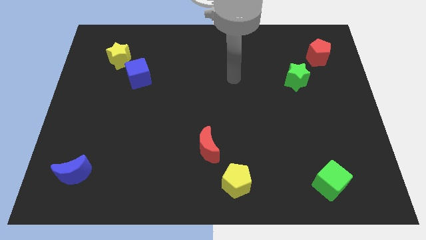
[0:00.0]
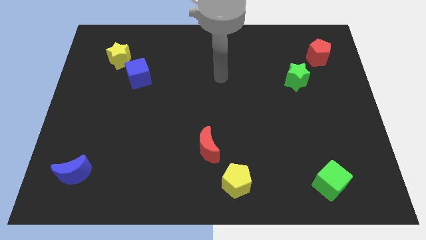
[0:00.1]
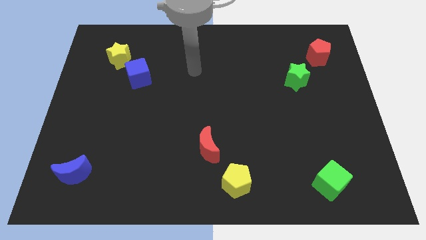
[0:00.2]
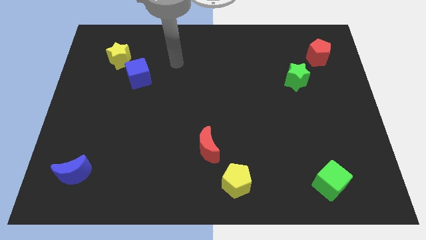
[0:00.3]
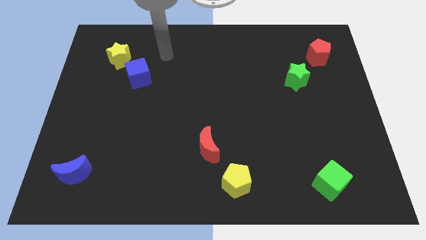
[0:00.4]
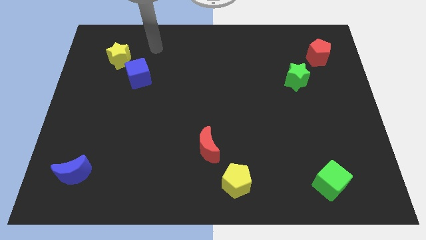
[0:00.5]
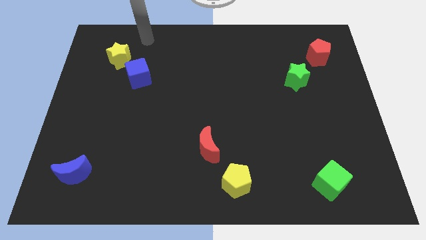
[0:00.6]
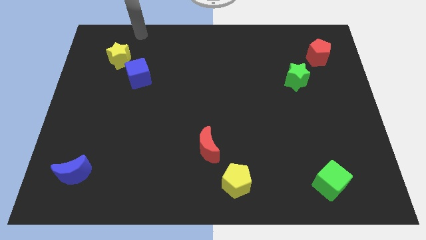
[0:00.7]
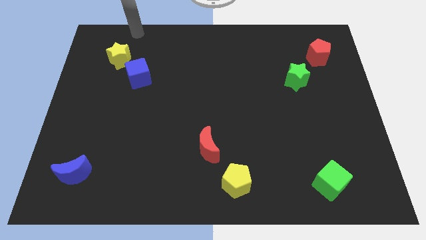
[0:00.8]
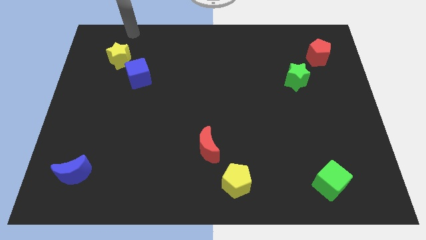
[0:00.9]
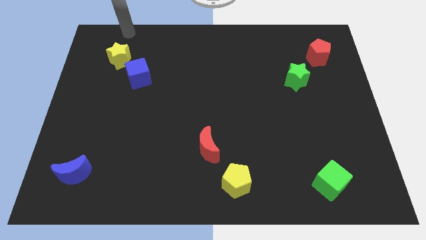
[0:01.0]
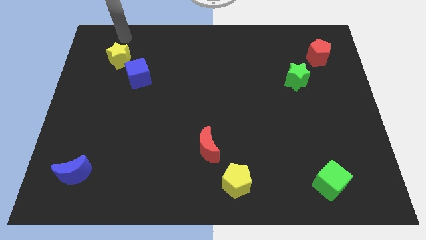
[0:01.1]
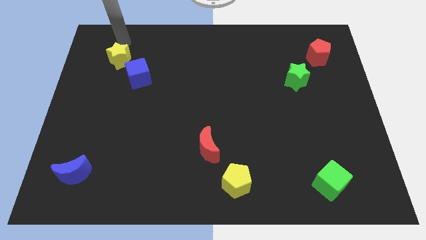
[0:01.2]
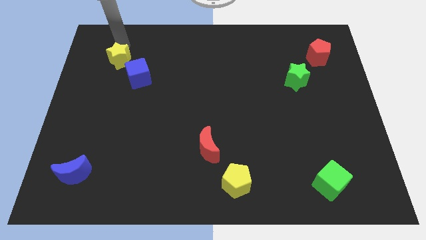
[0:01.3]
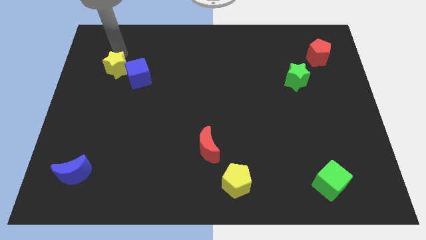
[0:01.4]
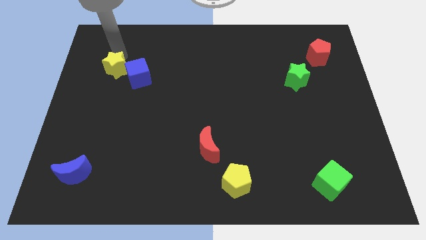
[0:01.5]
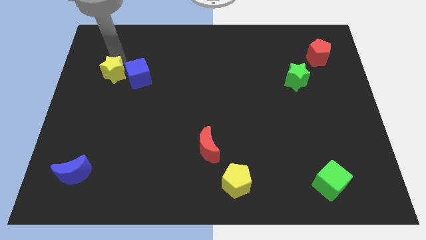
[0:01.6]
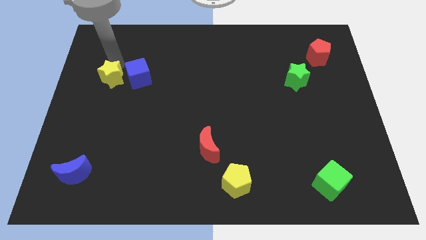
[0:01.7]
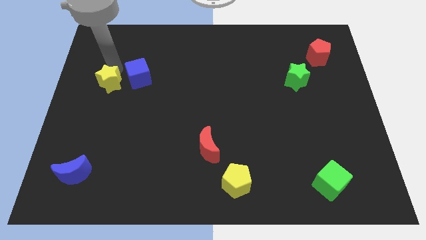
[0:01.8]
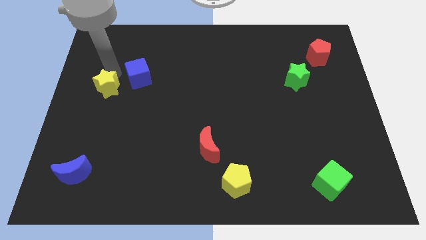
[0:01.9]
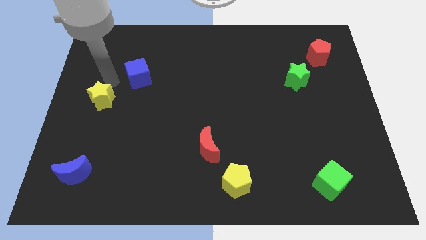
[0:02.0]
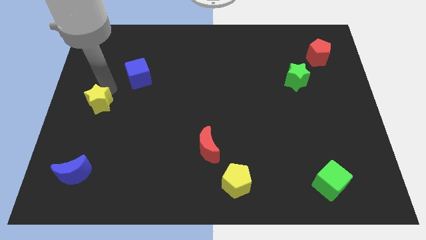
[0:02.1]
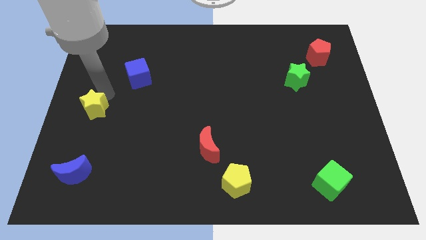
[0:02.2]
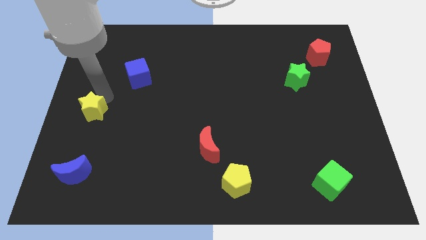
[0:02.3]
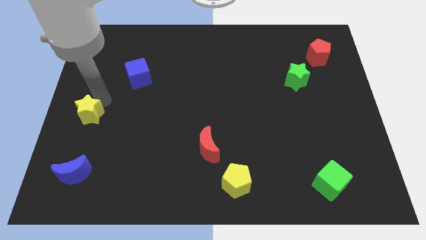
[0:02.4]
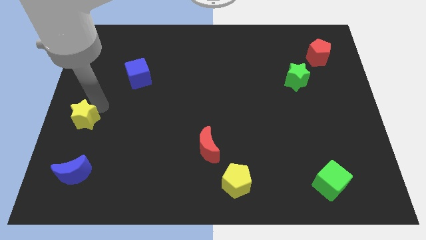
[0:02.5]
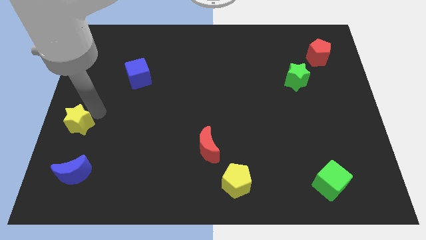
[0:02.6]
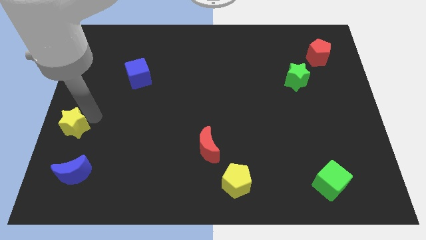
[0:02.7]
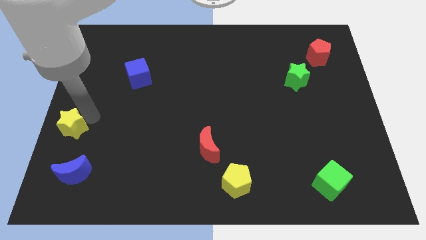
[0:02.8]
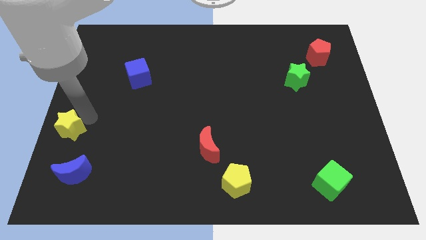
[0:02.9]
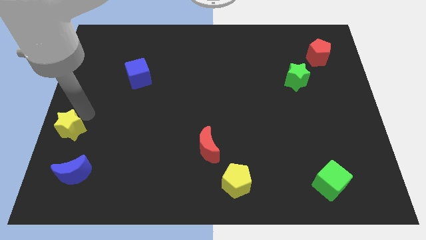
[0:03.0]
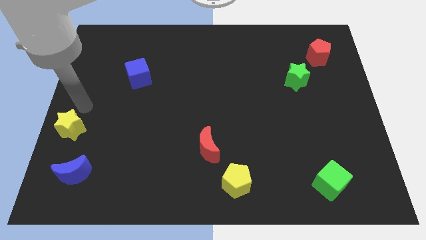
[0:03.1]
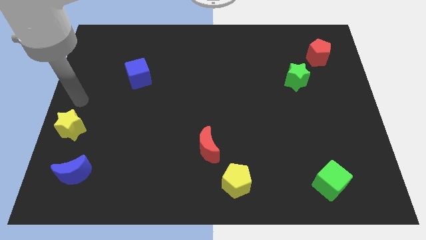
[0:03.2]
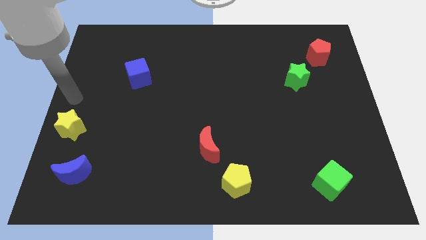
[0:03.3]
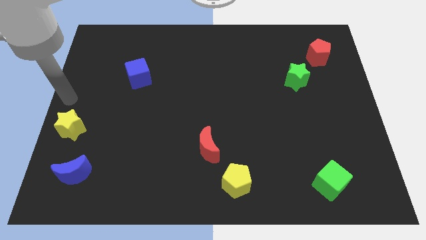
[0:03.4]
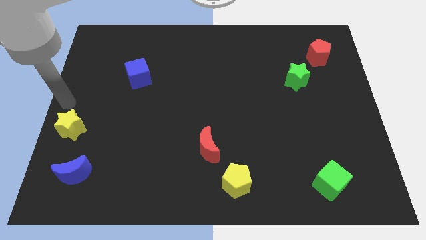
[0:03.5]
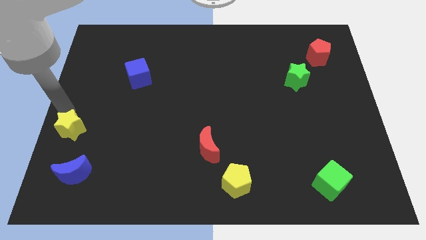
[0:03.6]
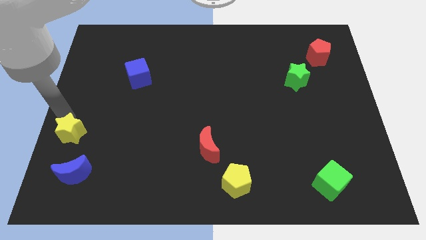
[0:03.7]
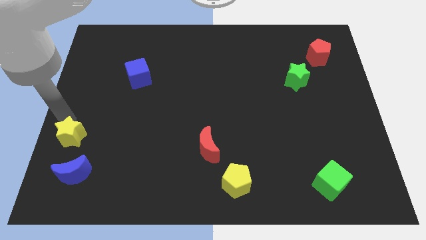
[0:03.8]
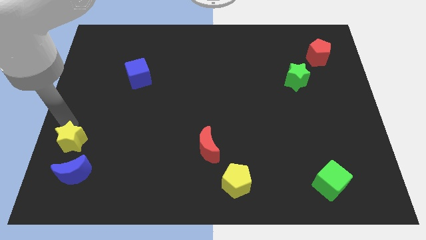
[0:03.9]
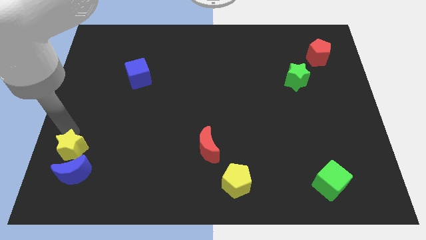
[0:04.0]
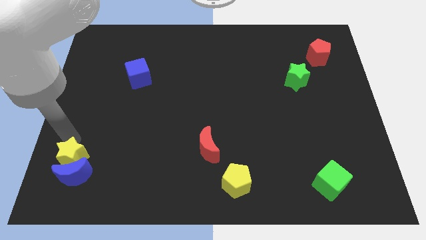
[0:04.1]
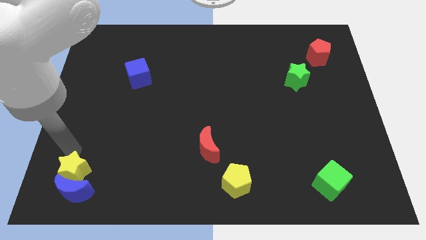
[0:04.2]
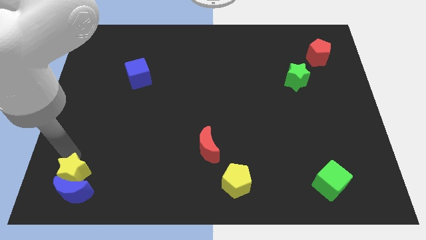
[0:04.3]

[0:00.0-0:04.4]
push the yellow star next to the blue moon

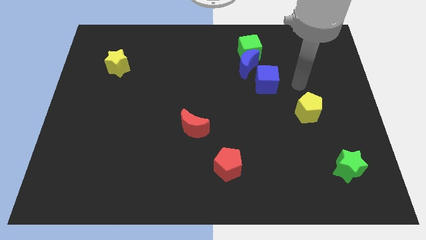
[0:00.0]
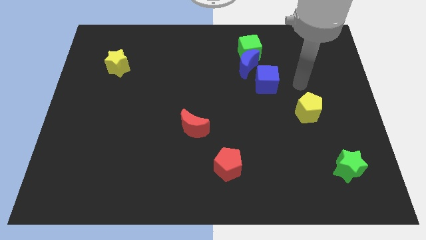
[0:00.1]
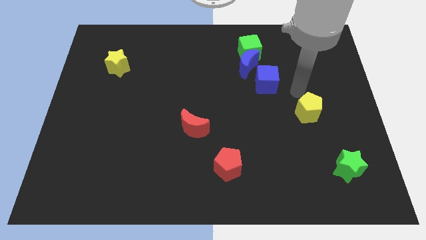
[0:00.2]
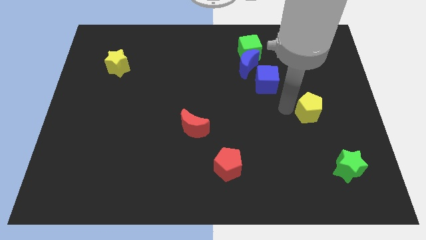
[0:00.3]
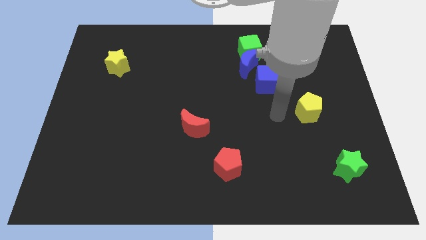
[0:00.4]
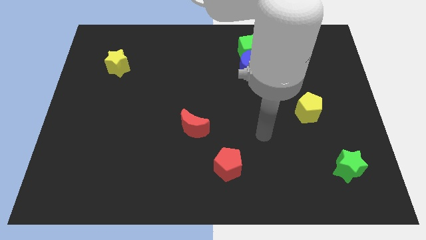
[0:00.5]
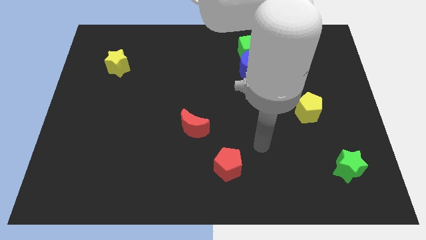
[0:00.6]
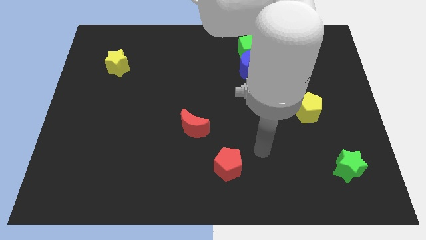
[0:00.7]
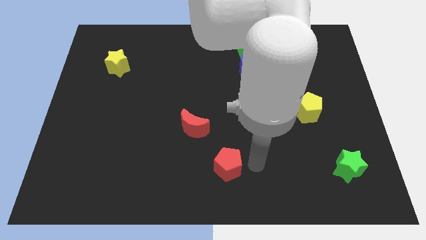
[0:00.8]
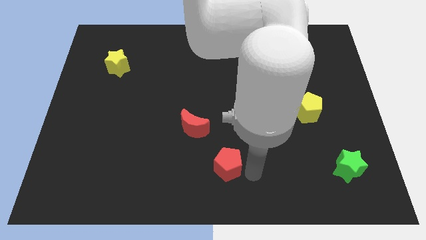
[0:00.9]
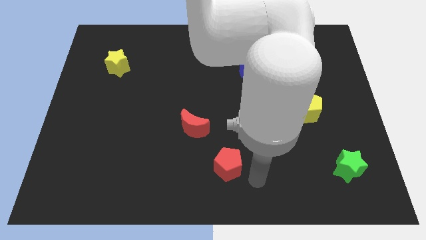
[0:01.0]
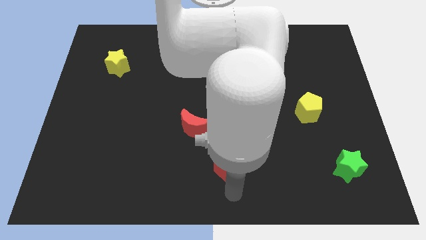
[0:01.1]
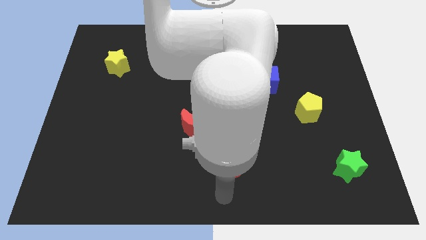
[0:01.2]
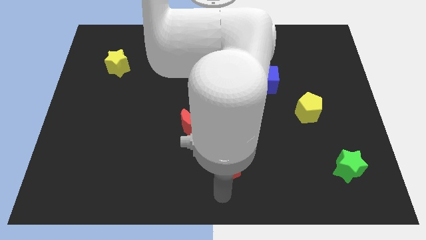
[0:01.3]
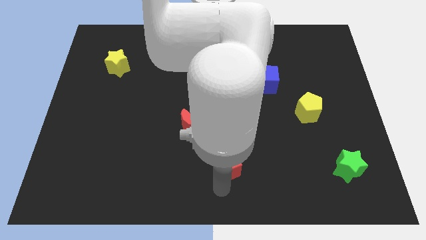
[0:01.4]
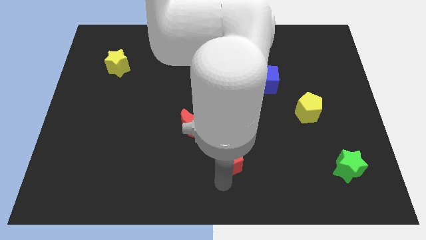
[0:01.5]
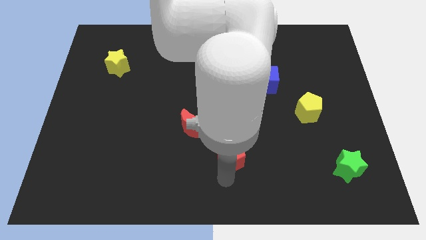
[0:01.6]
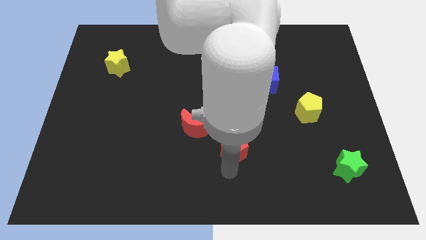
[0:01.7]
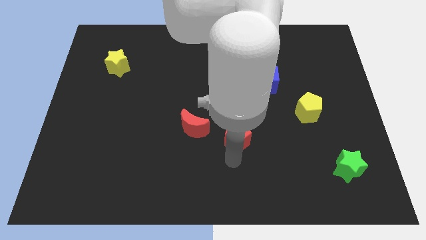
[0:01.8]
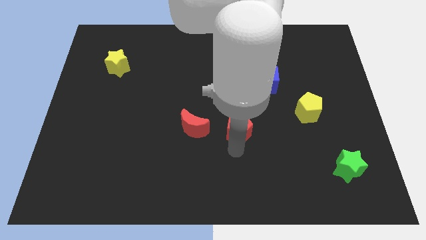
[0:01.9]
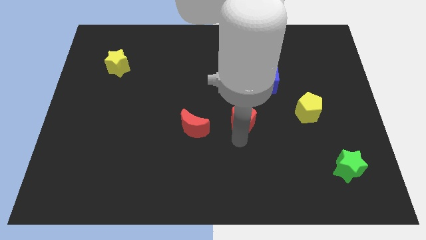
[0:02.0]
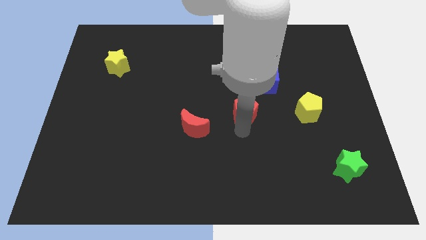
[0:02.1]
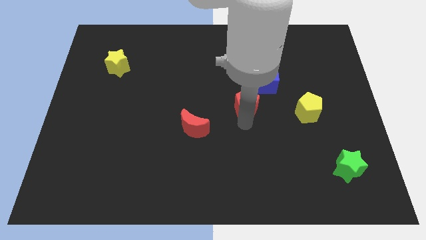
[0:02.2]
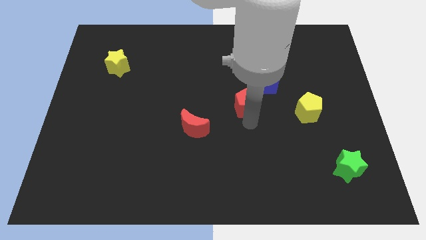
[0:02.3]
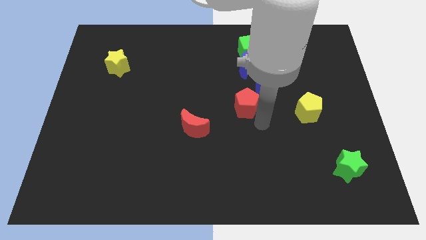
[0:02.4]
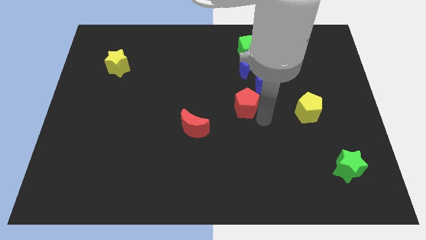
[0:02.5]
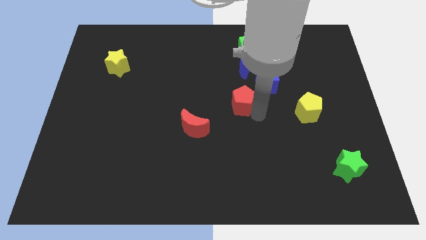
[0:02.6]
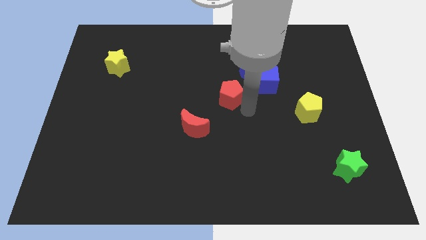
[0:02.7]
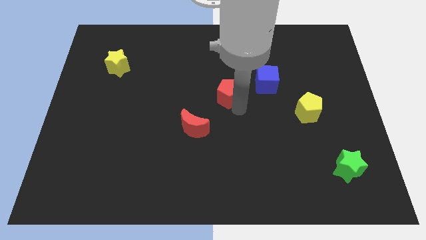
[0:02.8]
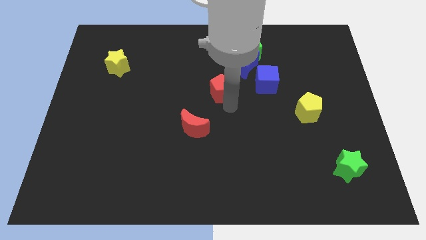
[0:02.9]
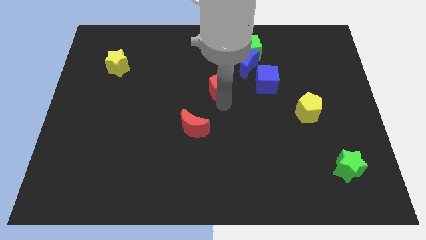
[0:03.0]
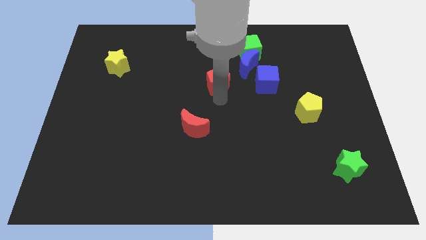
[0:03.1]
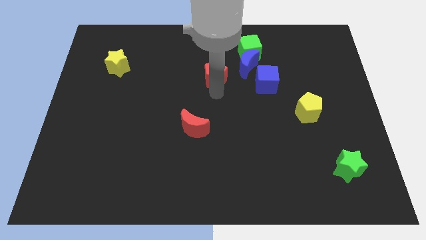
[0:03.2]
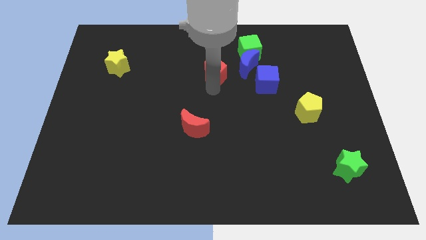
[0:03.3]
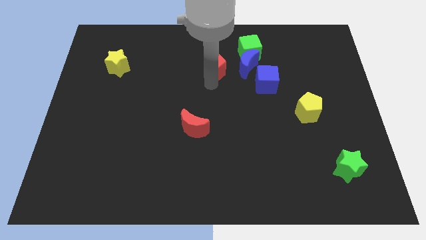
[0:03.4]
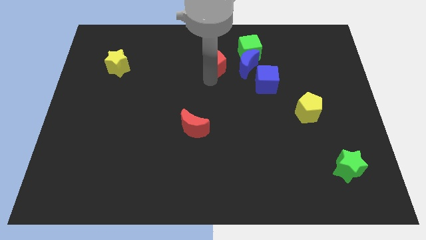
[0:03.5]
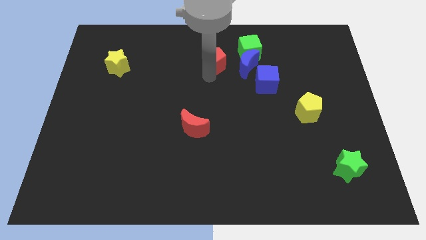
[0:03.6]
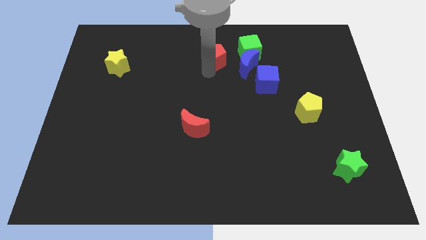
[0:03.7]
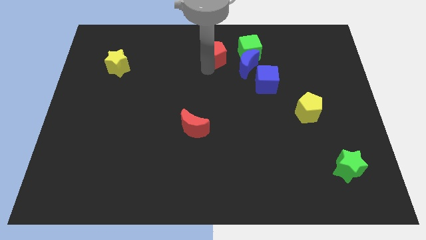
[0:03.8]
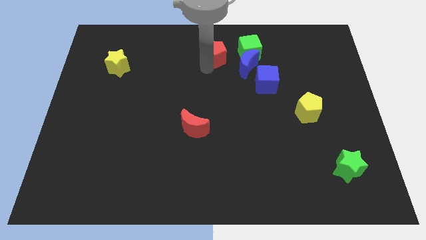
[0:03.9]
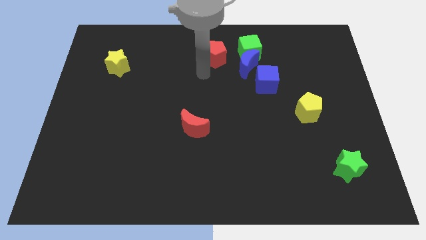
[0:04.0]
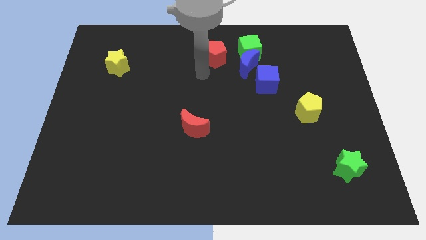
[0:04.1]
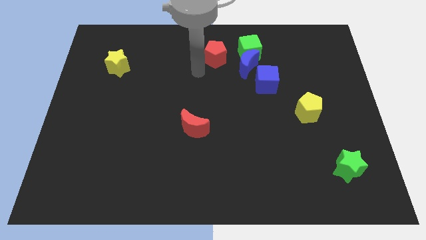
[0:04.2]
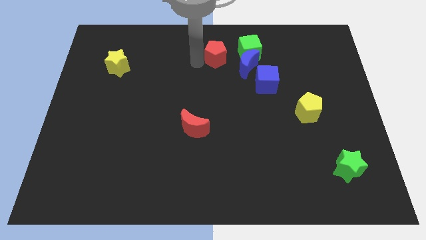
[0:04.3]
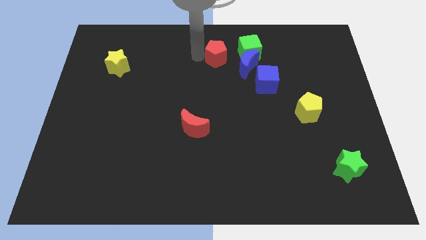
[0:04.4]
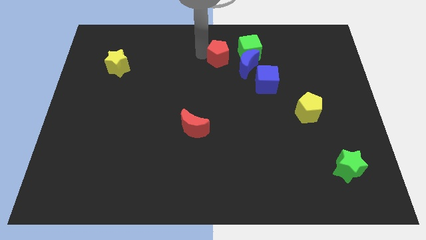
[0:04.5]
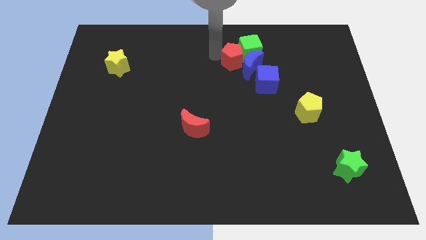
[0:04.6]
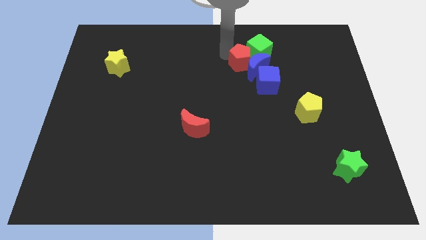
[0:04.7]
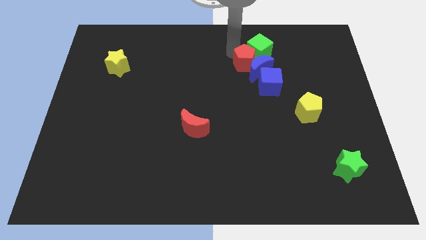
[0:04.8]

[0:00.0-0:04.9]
push the red pentagon towards the green cube
